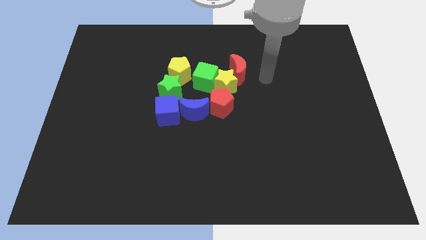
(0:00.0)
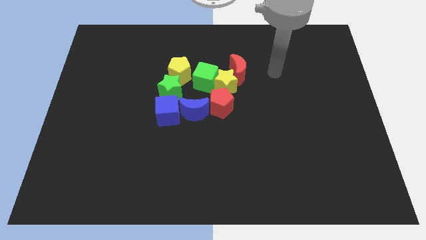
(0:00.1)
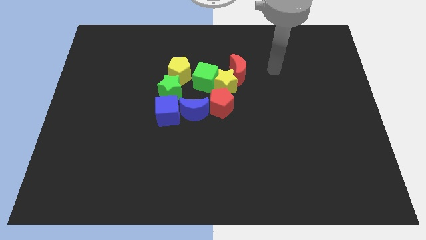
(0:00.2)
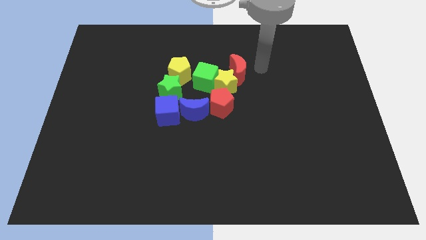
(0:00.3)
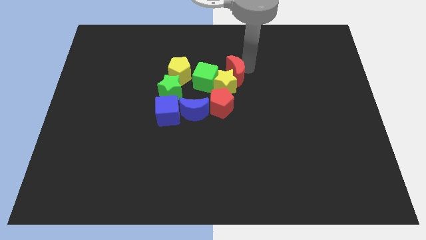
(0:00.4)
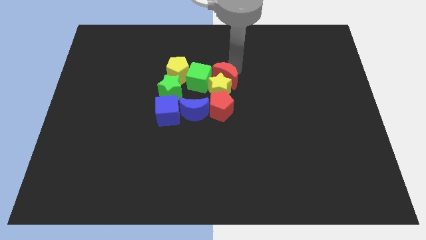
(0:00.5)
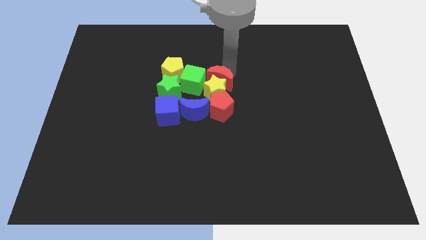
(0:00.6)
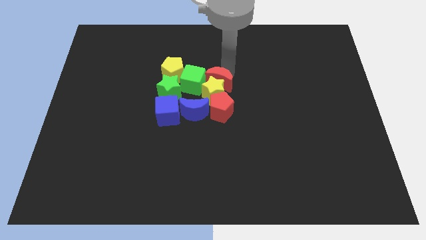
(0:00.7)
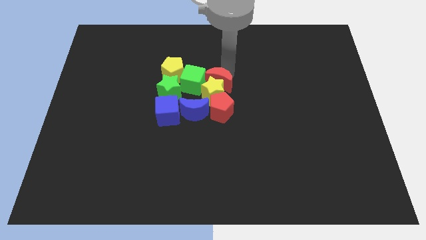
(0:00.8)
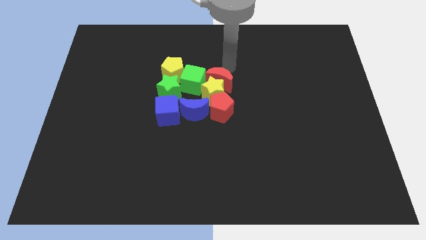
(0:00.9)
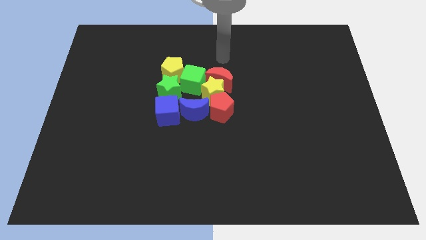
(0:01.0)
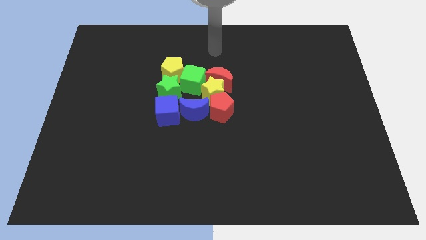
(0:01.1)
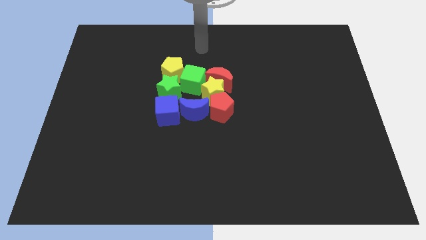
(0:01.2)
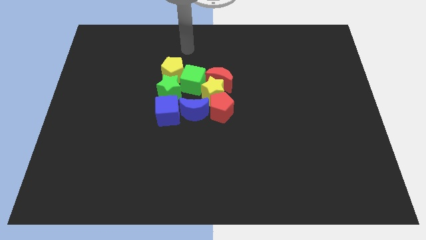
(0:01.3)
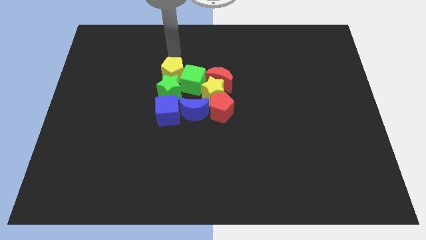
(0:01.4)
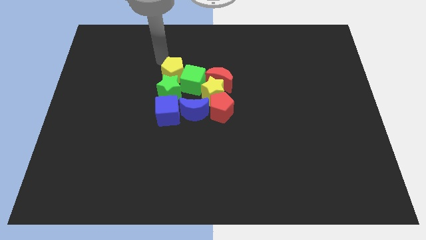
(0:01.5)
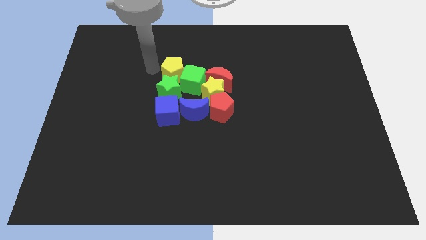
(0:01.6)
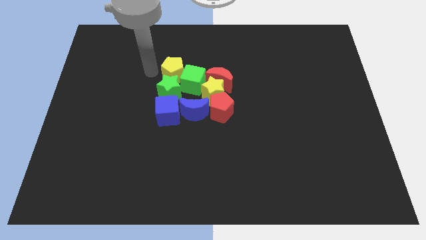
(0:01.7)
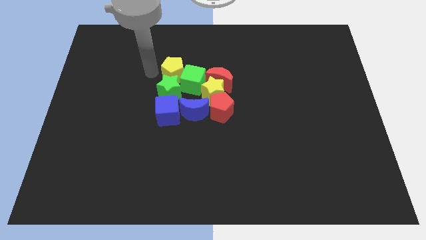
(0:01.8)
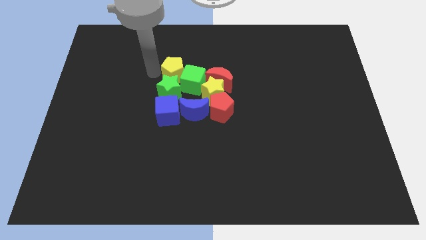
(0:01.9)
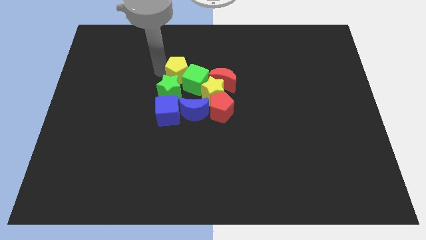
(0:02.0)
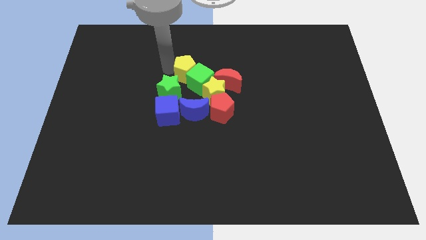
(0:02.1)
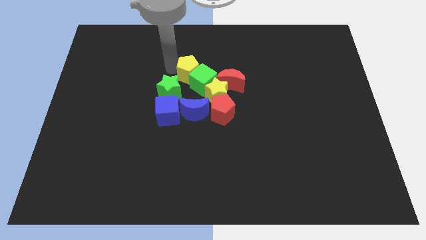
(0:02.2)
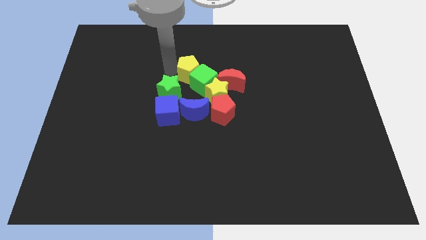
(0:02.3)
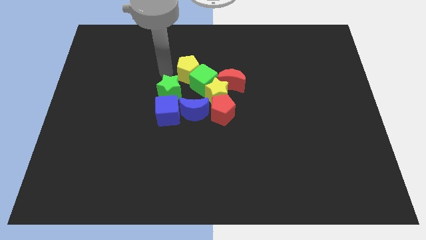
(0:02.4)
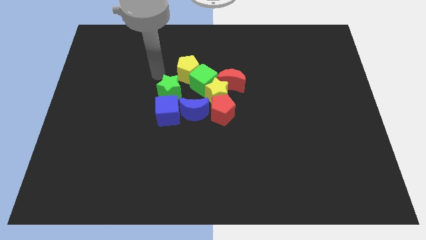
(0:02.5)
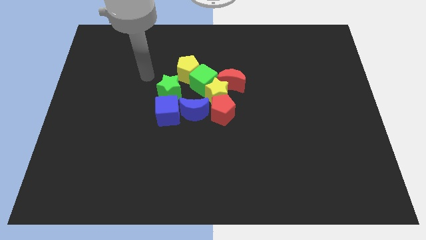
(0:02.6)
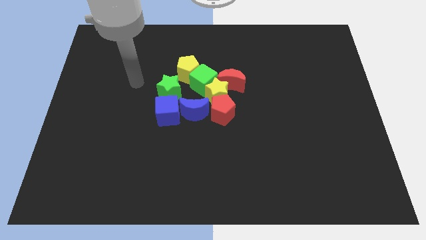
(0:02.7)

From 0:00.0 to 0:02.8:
push the red moon and the yellow pentagon into the group of blocks

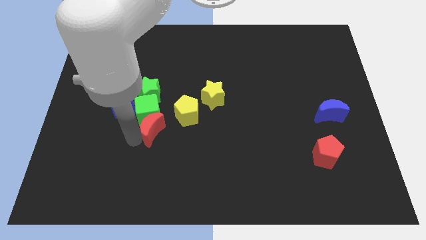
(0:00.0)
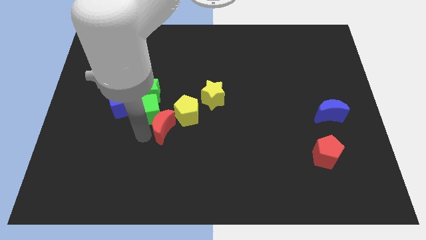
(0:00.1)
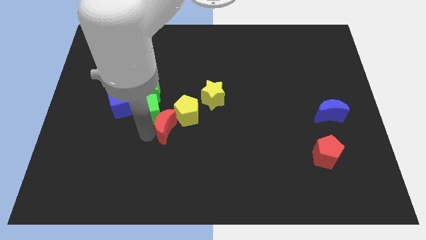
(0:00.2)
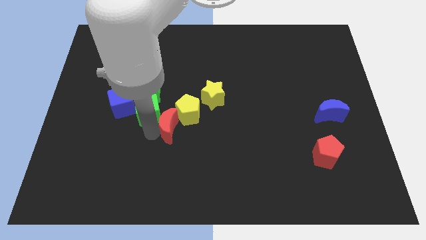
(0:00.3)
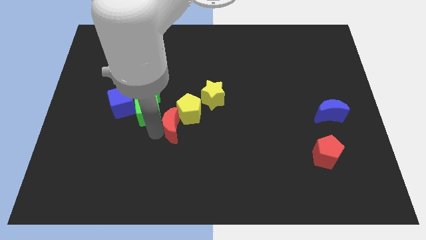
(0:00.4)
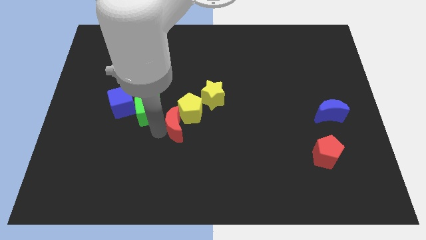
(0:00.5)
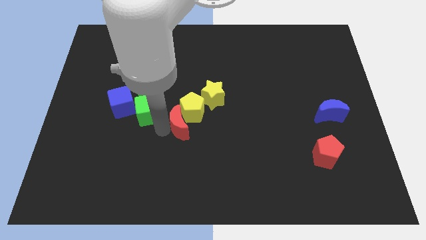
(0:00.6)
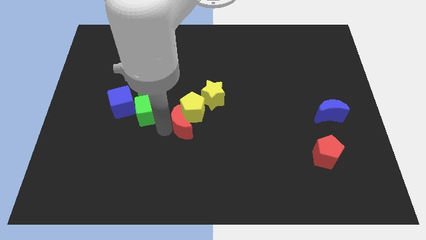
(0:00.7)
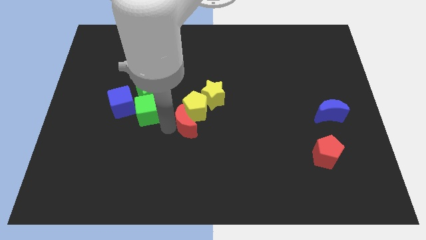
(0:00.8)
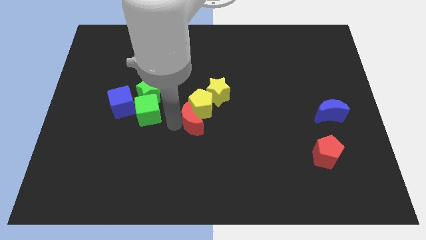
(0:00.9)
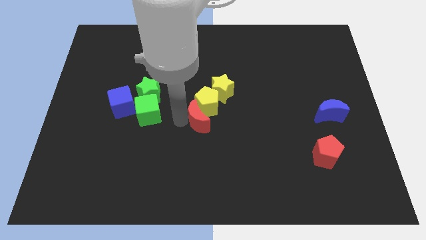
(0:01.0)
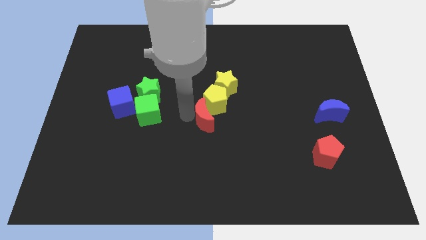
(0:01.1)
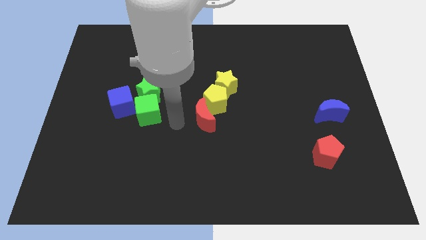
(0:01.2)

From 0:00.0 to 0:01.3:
push the red crescent into the yellow pentagon towards the yellow star

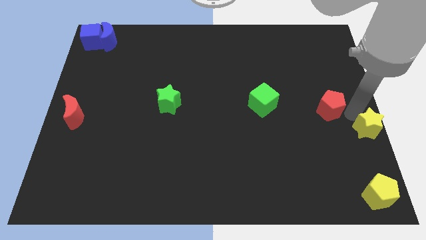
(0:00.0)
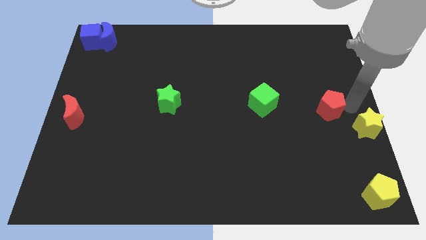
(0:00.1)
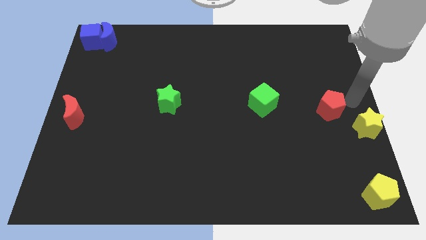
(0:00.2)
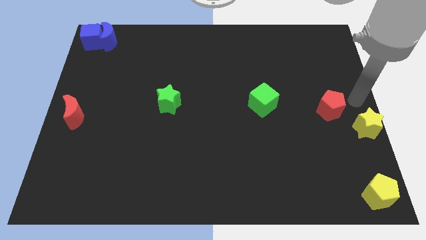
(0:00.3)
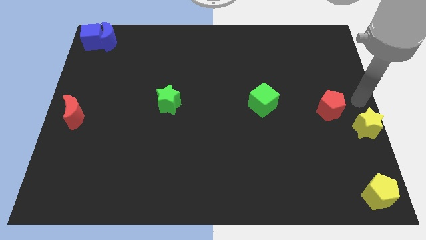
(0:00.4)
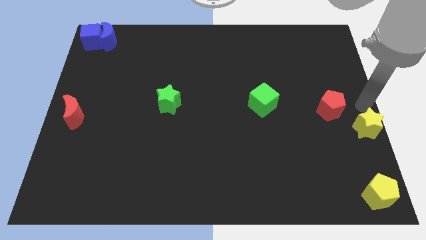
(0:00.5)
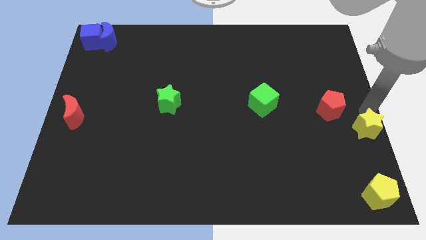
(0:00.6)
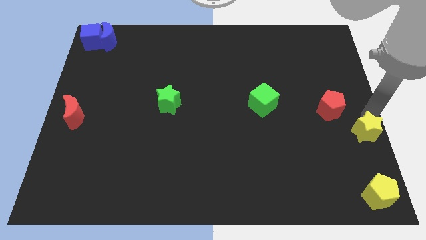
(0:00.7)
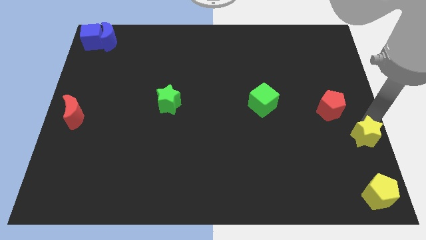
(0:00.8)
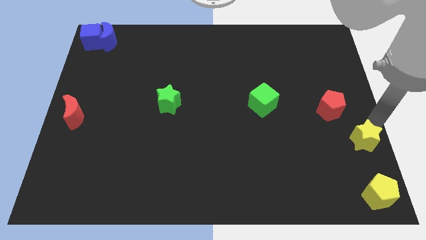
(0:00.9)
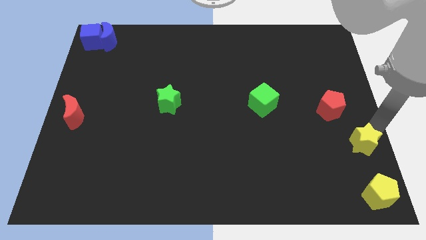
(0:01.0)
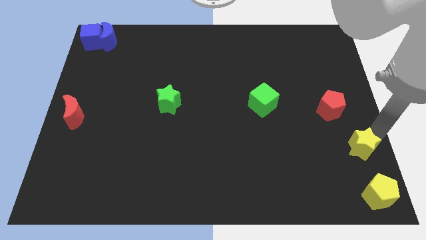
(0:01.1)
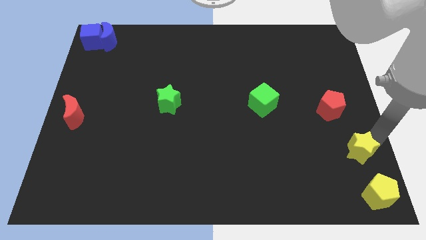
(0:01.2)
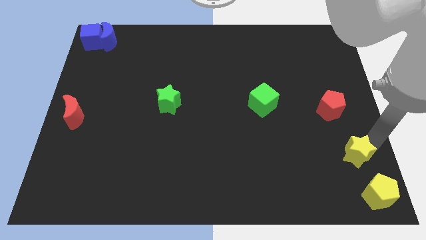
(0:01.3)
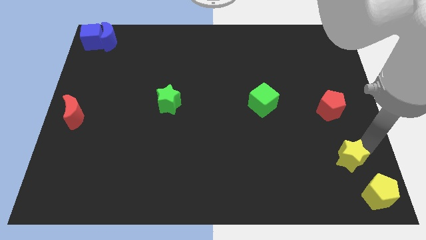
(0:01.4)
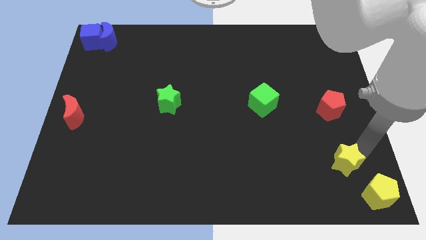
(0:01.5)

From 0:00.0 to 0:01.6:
put the yellow star between the red pentagon and yellow pentagon

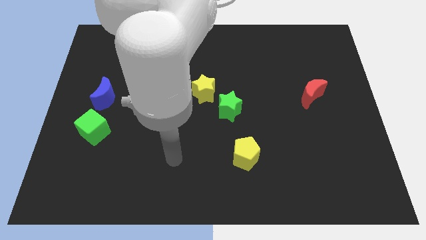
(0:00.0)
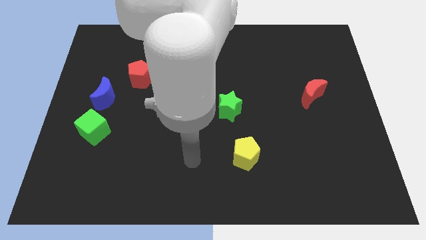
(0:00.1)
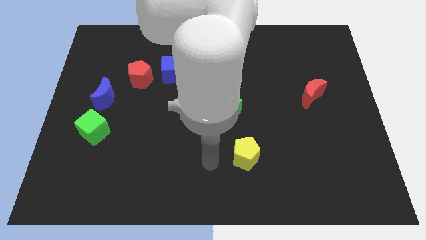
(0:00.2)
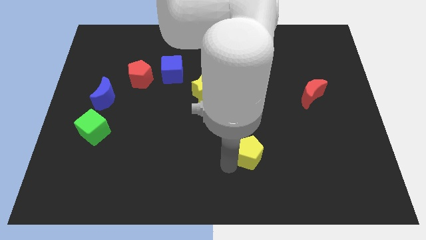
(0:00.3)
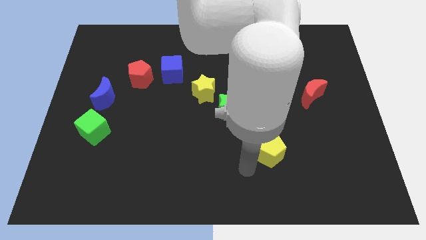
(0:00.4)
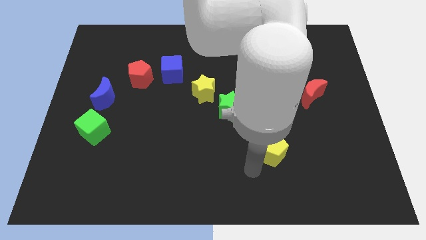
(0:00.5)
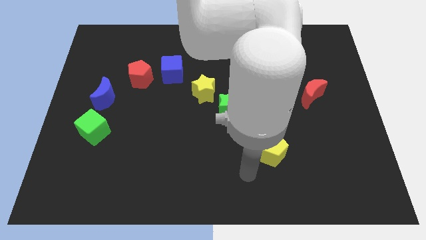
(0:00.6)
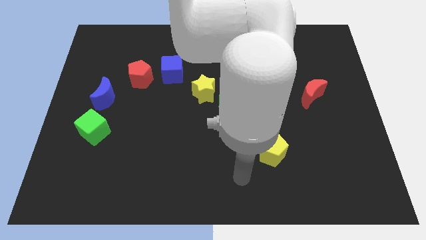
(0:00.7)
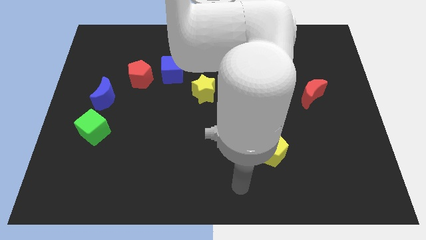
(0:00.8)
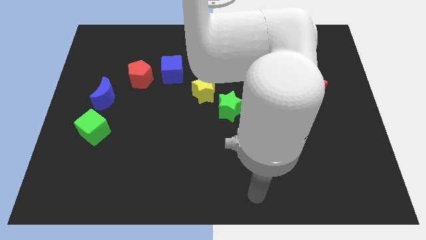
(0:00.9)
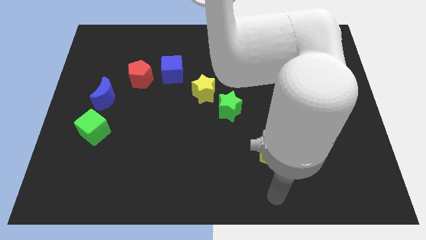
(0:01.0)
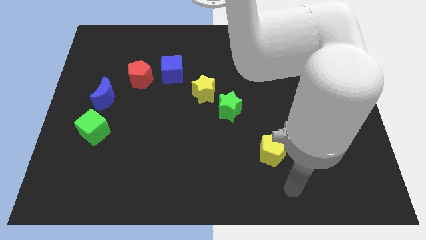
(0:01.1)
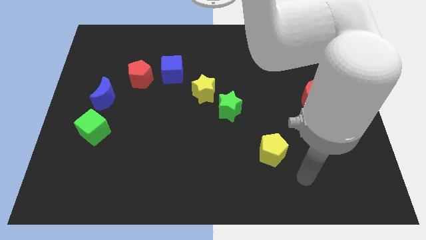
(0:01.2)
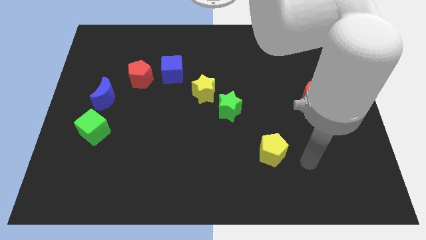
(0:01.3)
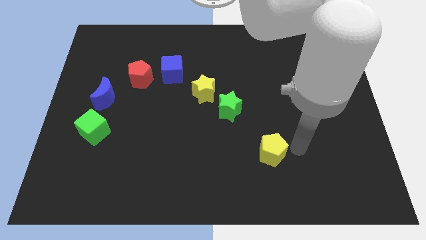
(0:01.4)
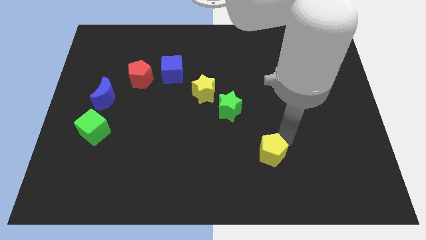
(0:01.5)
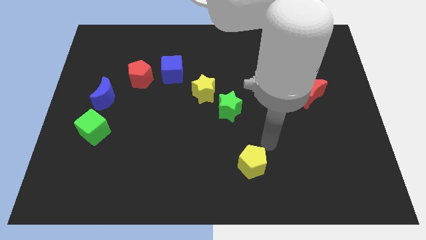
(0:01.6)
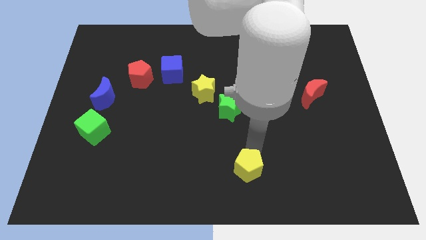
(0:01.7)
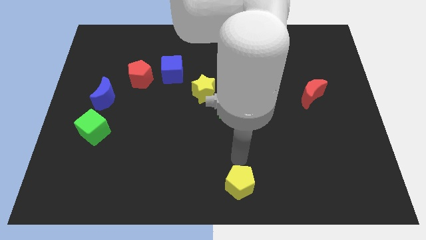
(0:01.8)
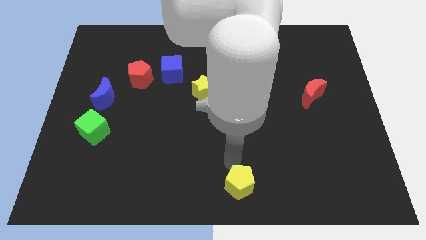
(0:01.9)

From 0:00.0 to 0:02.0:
move the yellow pentagon to the bottom center of the board

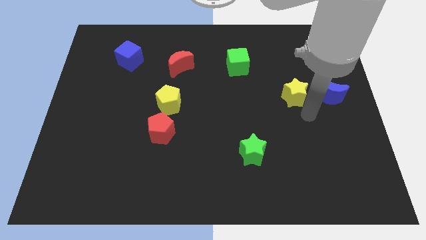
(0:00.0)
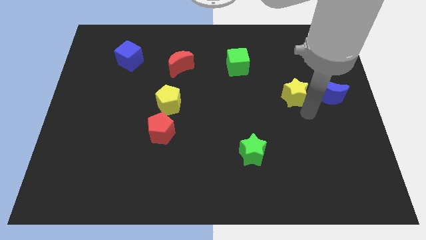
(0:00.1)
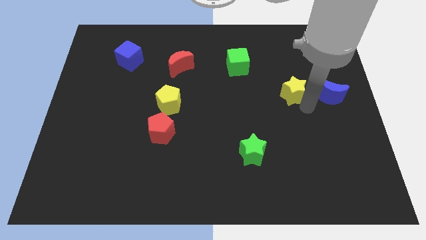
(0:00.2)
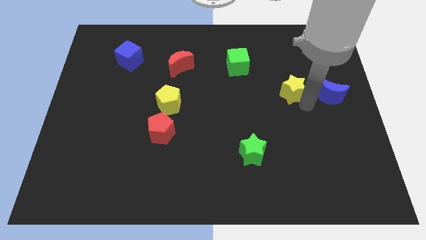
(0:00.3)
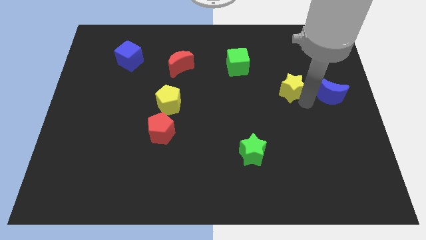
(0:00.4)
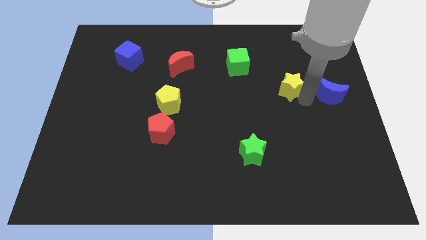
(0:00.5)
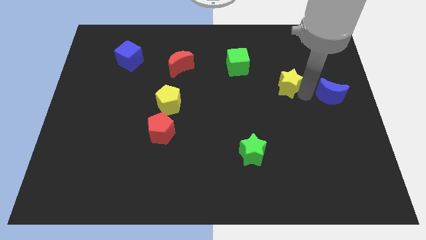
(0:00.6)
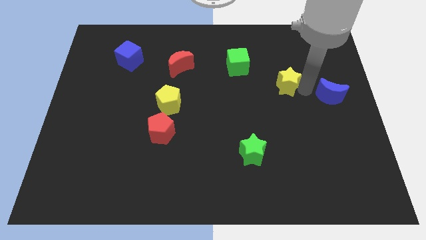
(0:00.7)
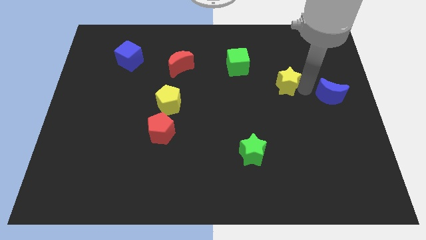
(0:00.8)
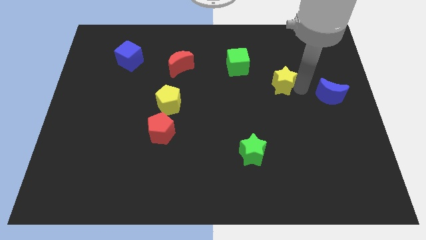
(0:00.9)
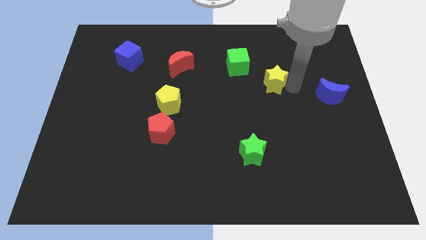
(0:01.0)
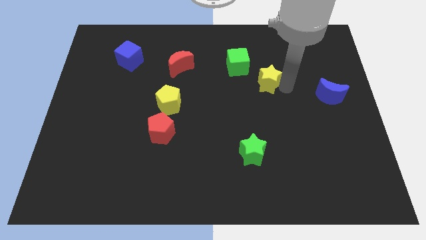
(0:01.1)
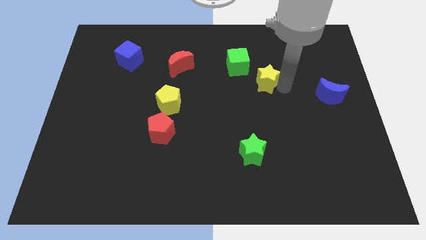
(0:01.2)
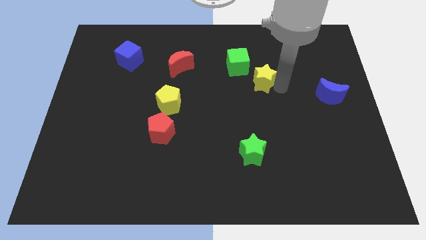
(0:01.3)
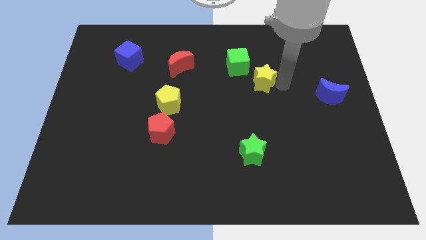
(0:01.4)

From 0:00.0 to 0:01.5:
move the yellow star towards the green cube
